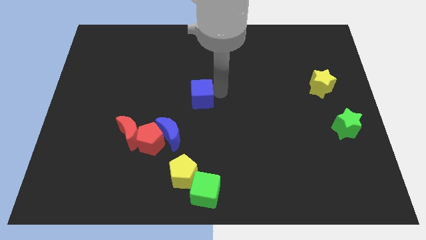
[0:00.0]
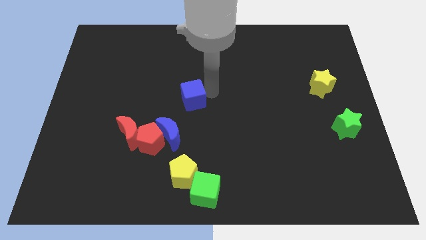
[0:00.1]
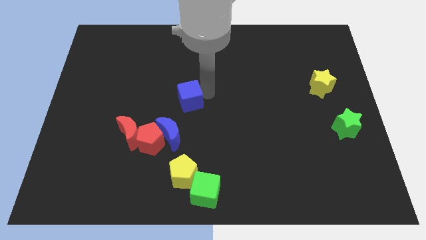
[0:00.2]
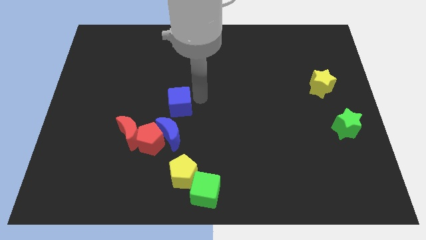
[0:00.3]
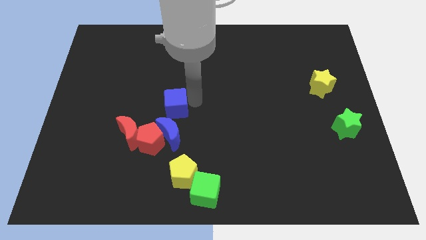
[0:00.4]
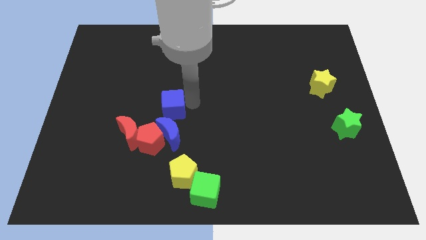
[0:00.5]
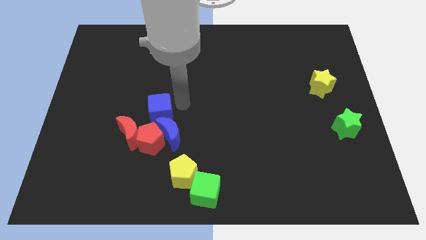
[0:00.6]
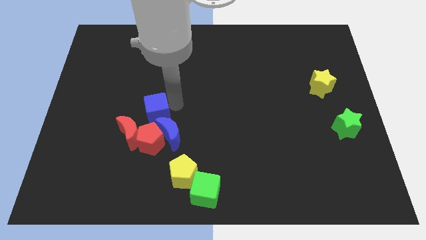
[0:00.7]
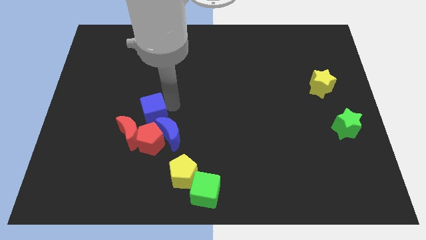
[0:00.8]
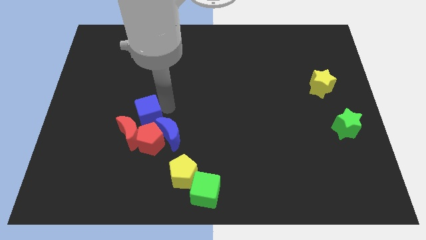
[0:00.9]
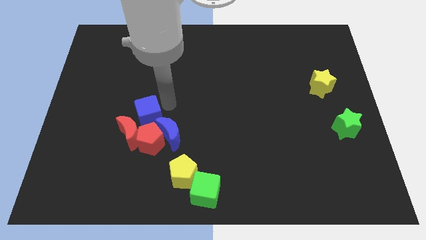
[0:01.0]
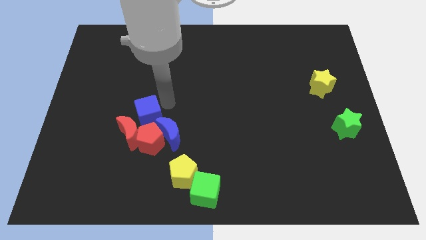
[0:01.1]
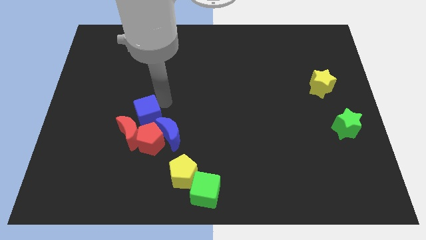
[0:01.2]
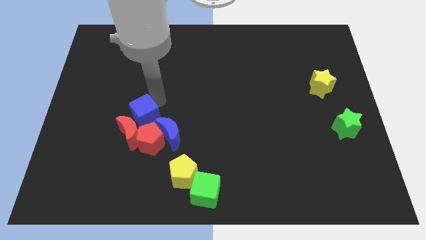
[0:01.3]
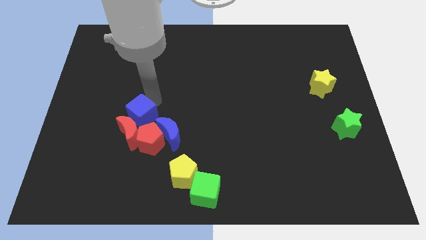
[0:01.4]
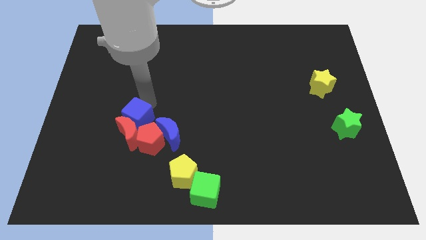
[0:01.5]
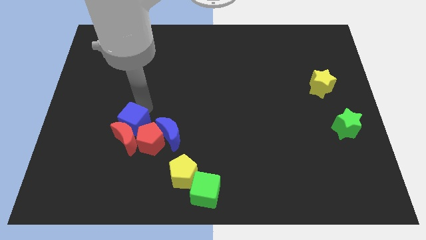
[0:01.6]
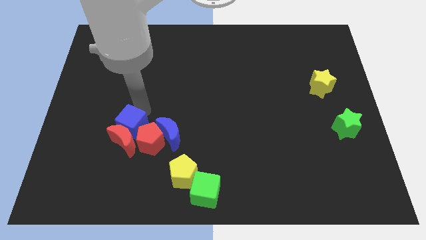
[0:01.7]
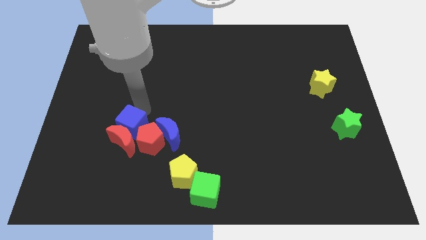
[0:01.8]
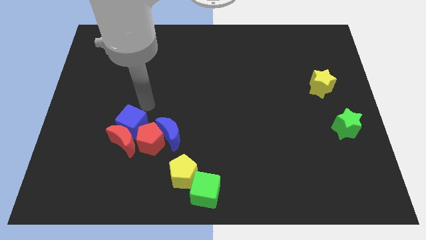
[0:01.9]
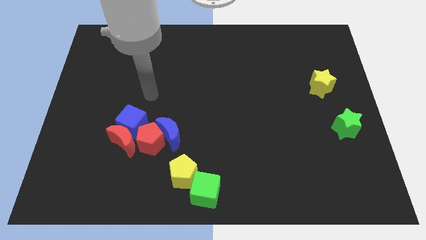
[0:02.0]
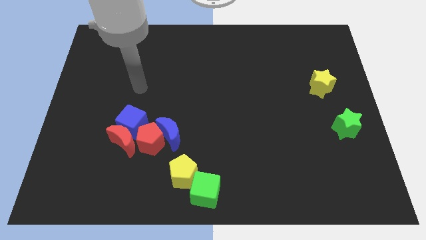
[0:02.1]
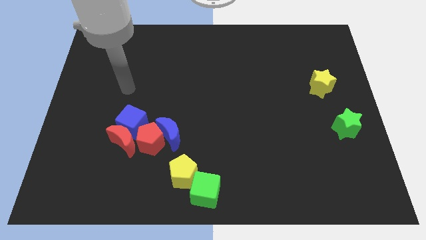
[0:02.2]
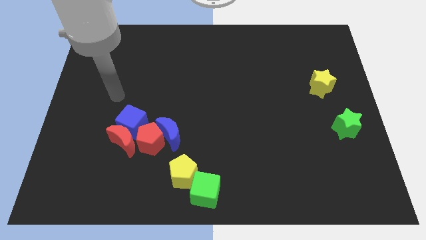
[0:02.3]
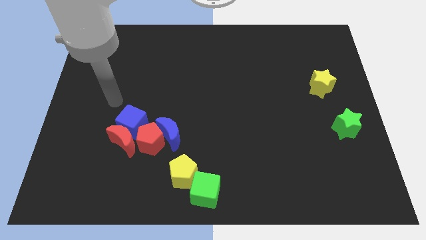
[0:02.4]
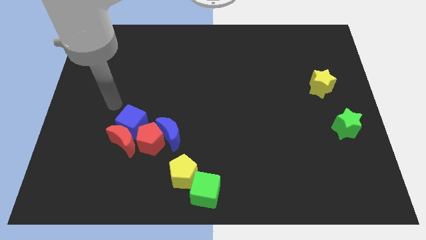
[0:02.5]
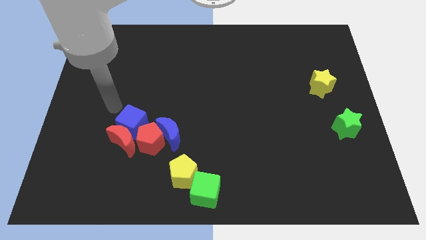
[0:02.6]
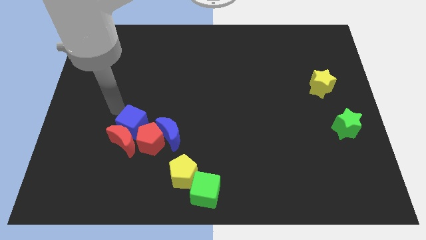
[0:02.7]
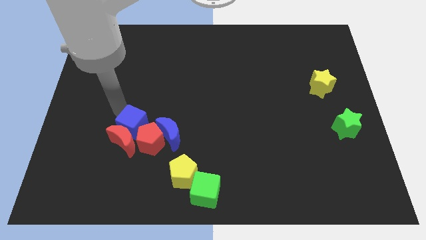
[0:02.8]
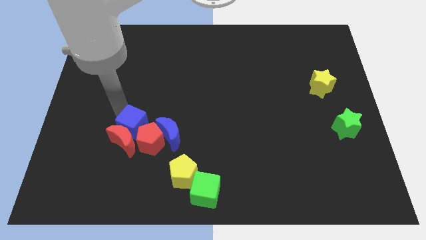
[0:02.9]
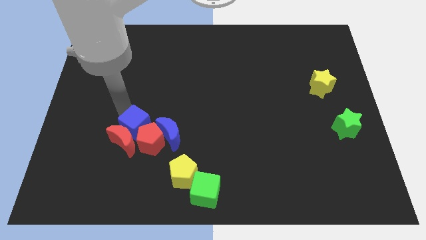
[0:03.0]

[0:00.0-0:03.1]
move the blue cube to the top right of the red crescent

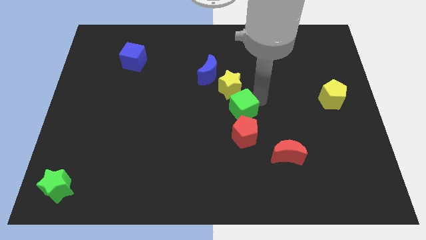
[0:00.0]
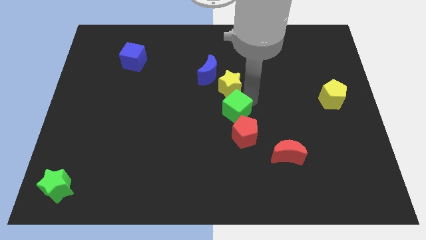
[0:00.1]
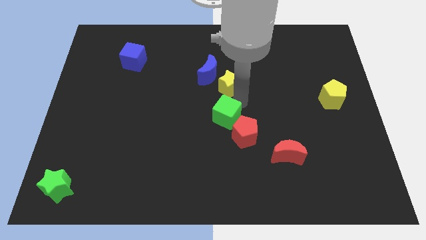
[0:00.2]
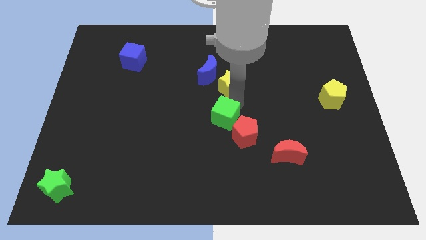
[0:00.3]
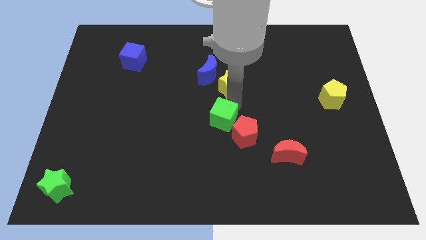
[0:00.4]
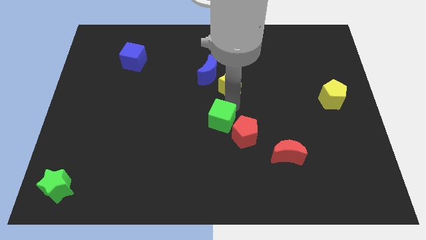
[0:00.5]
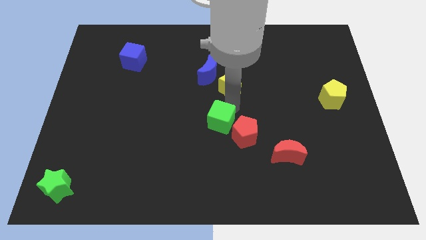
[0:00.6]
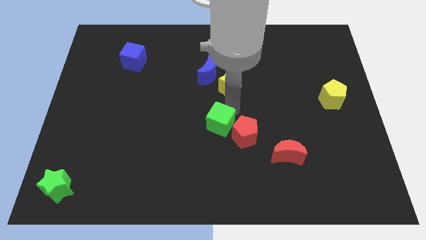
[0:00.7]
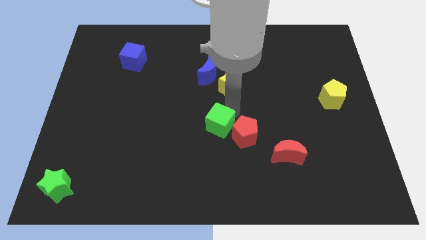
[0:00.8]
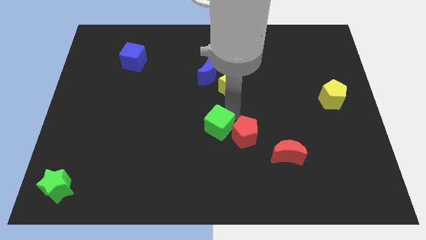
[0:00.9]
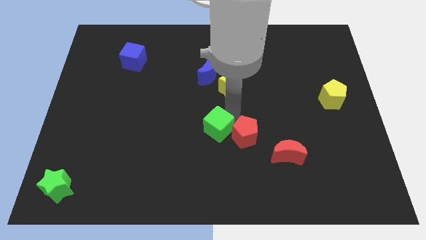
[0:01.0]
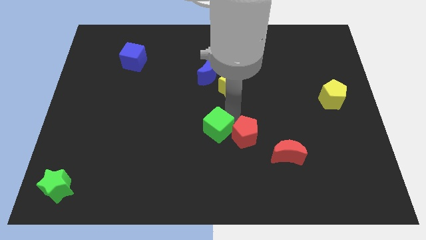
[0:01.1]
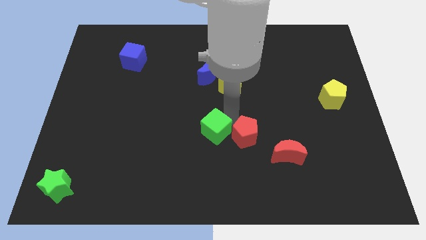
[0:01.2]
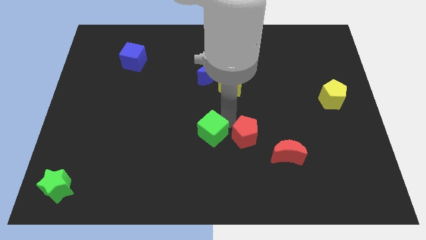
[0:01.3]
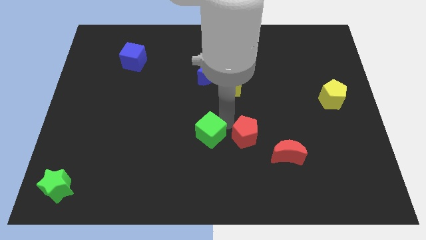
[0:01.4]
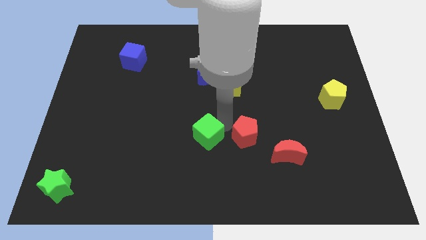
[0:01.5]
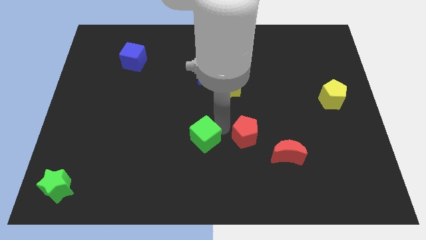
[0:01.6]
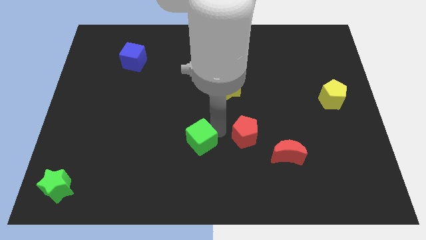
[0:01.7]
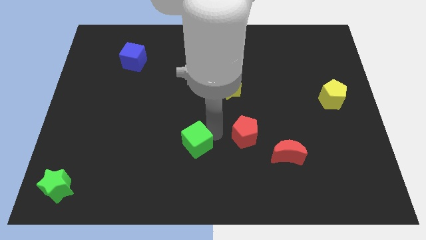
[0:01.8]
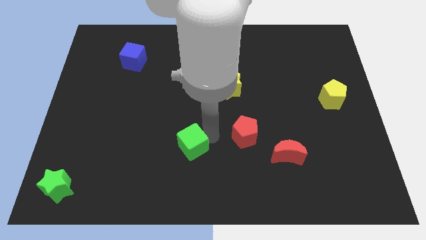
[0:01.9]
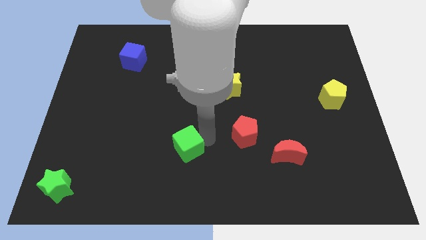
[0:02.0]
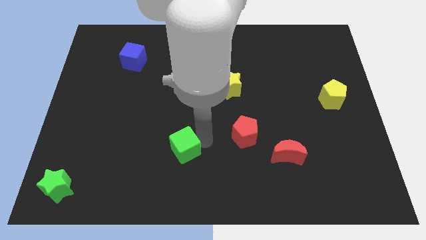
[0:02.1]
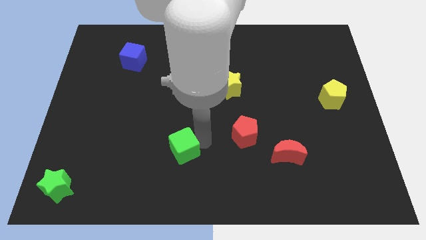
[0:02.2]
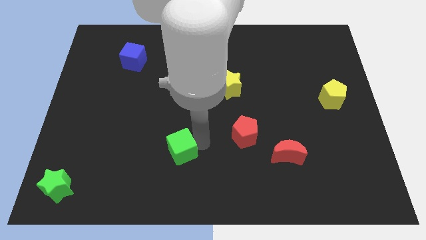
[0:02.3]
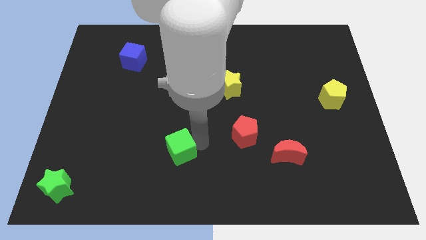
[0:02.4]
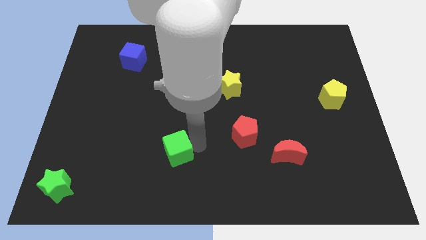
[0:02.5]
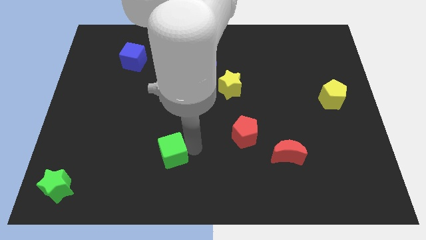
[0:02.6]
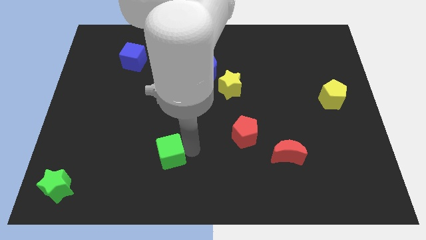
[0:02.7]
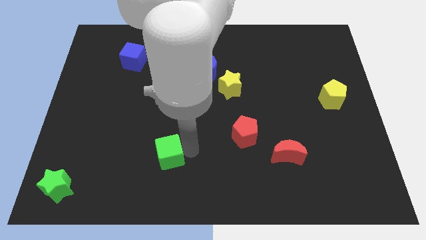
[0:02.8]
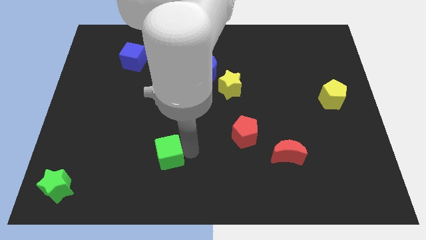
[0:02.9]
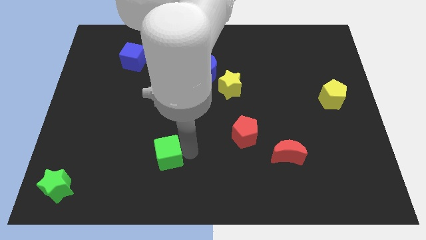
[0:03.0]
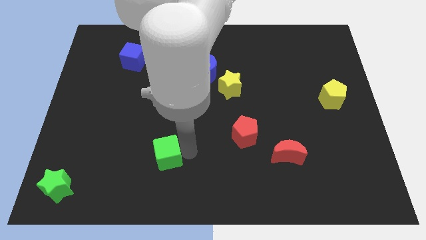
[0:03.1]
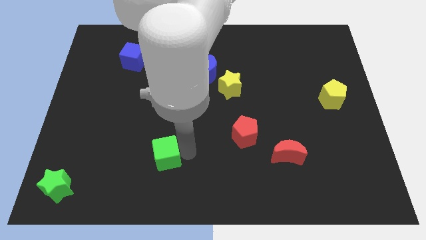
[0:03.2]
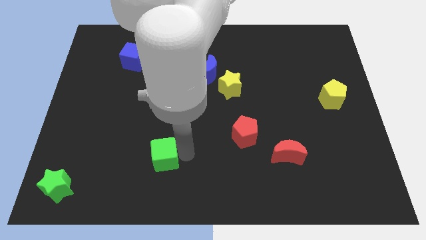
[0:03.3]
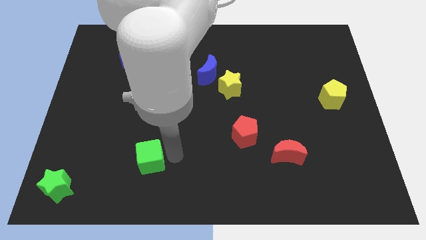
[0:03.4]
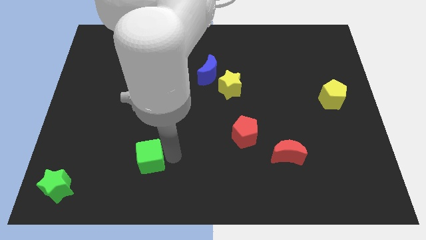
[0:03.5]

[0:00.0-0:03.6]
push the green cube to the bottom left of the board

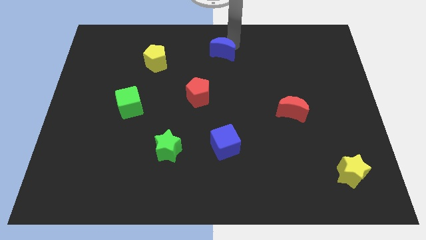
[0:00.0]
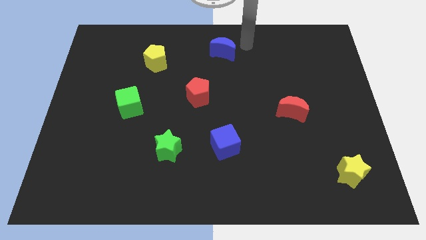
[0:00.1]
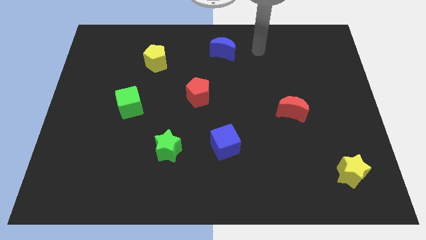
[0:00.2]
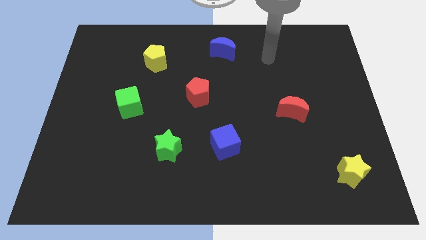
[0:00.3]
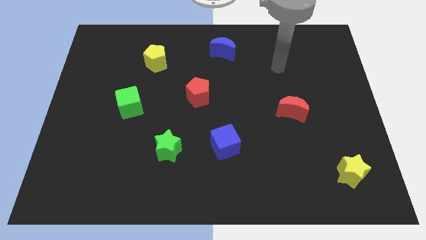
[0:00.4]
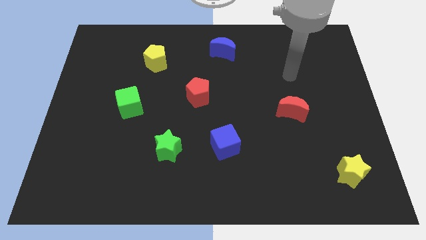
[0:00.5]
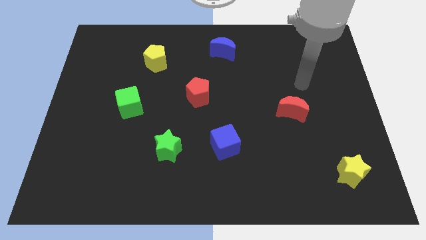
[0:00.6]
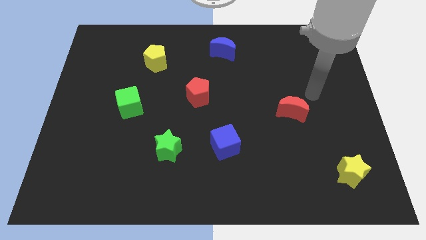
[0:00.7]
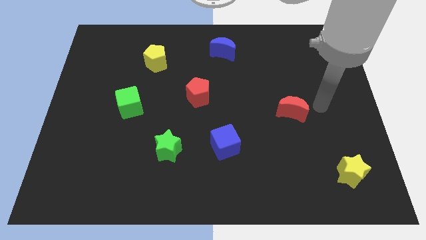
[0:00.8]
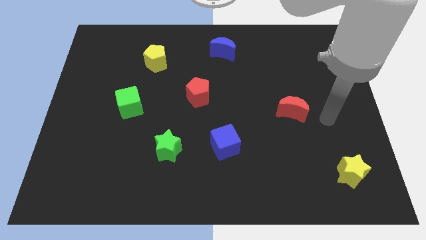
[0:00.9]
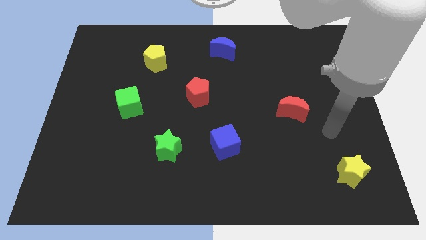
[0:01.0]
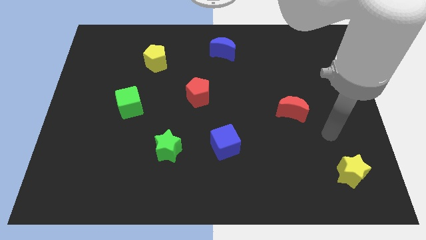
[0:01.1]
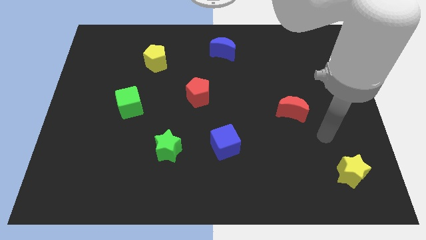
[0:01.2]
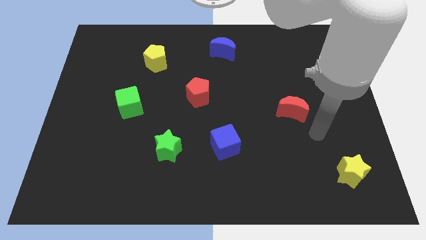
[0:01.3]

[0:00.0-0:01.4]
push your arm at the bottom right of the red moon

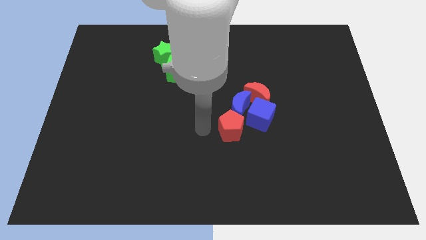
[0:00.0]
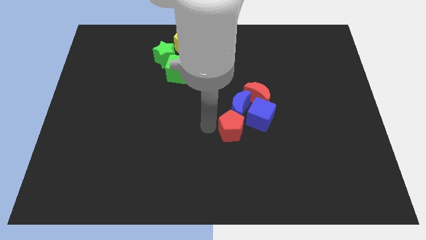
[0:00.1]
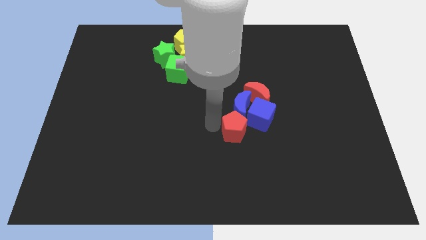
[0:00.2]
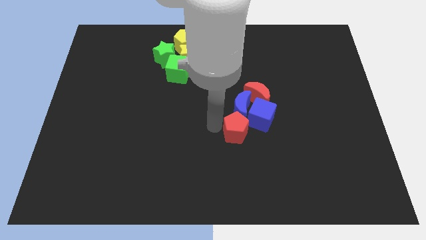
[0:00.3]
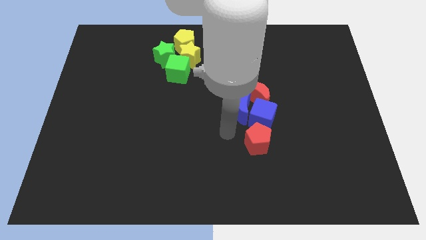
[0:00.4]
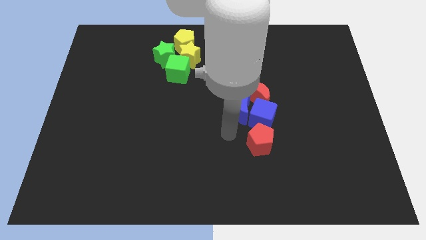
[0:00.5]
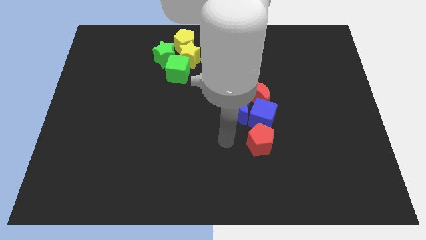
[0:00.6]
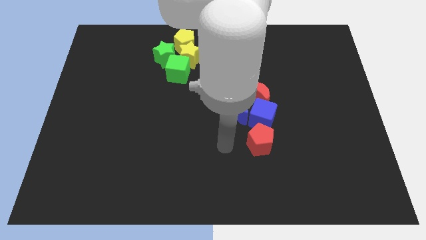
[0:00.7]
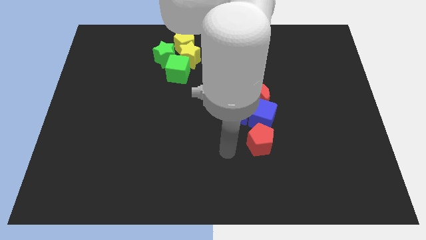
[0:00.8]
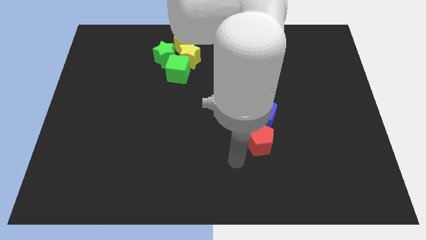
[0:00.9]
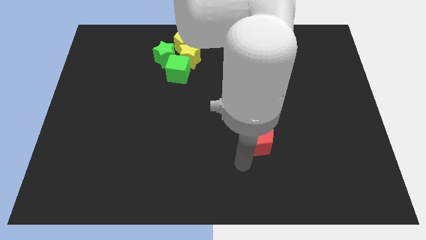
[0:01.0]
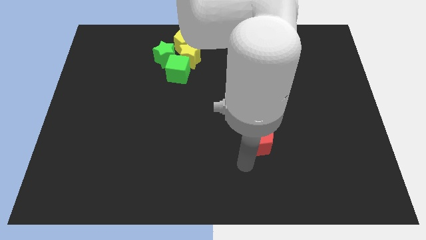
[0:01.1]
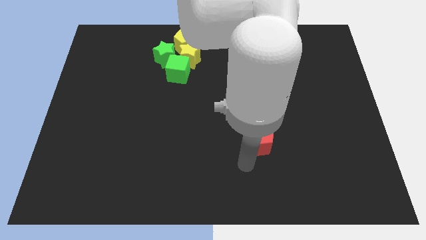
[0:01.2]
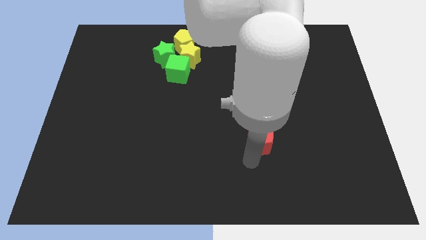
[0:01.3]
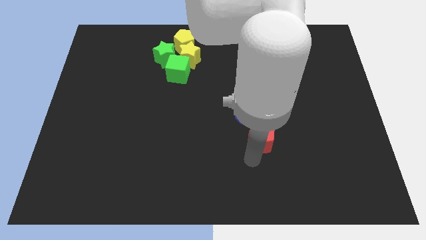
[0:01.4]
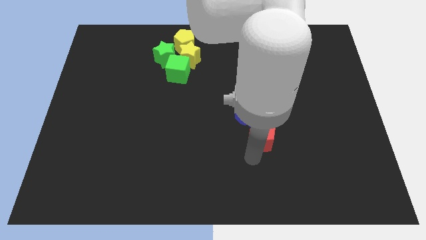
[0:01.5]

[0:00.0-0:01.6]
move red pentagon into blue cube
